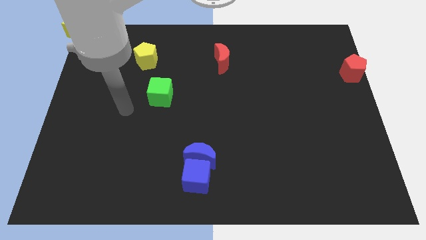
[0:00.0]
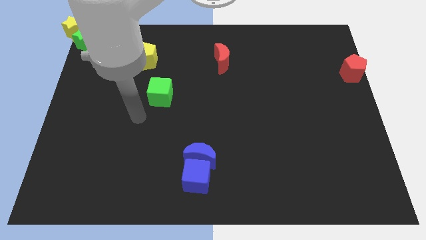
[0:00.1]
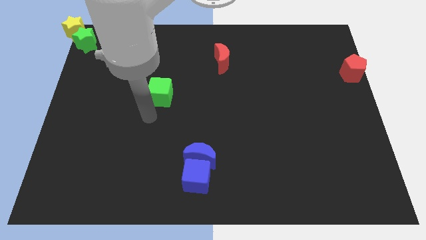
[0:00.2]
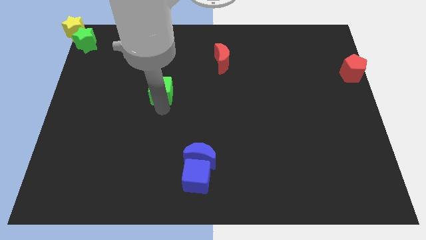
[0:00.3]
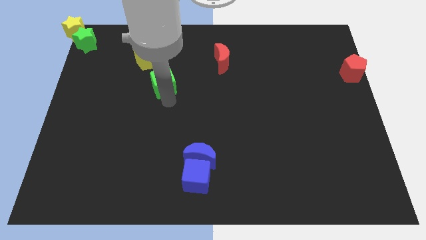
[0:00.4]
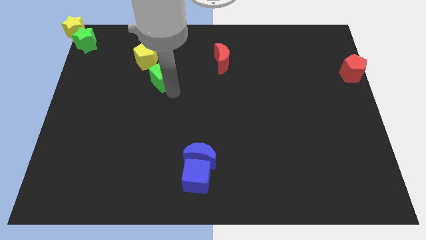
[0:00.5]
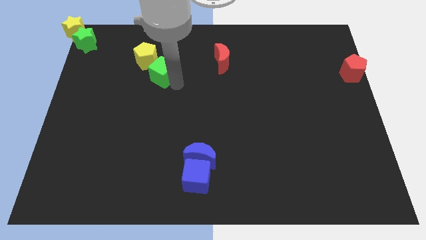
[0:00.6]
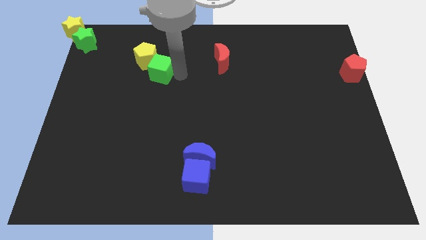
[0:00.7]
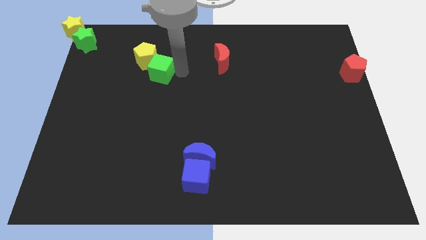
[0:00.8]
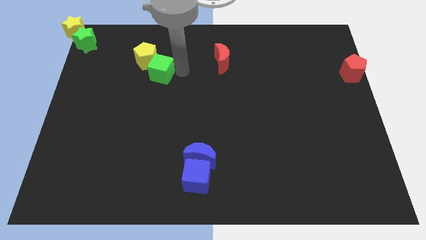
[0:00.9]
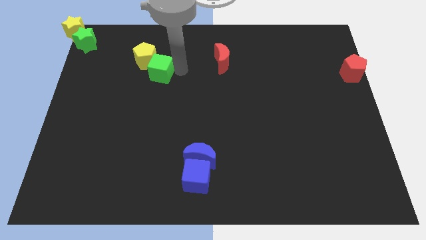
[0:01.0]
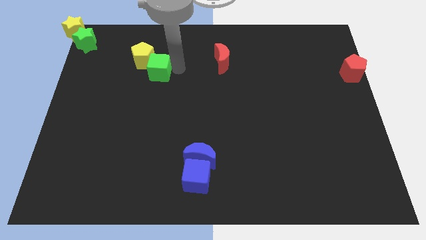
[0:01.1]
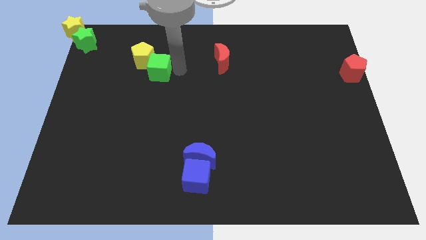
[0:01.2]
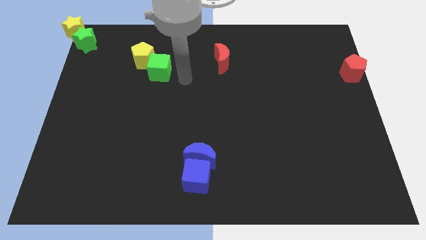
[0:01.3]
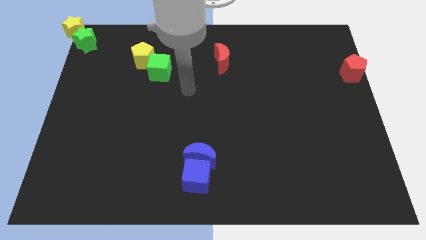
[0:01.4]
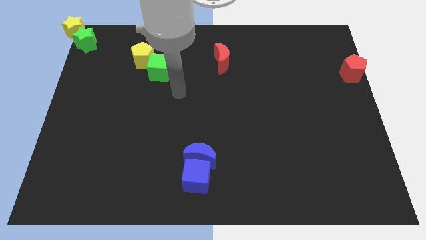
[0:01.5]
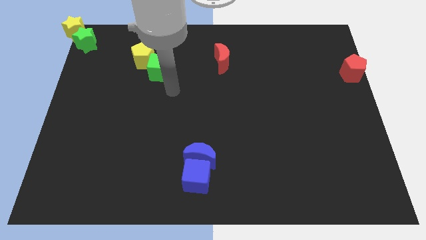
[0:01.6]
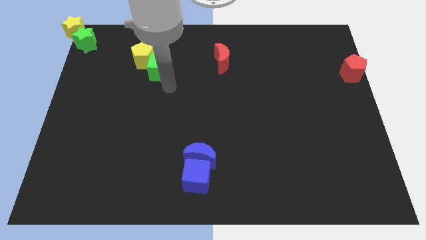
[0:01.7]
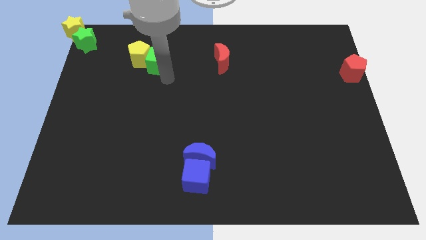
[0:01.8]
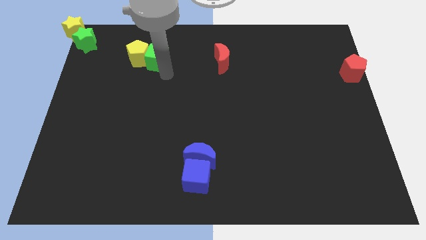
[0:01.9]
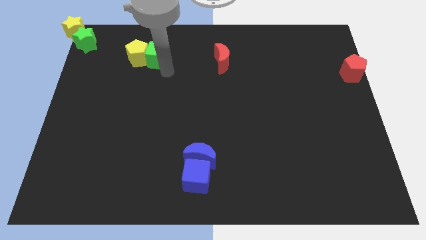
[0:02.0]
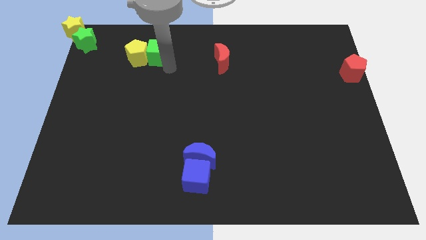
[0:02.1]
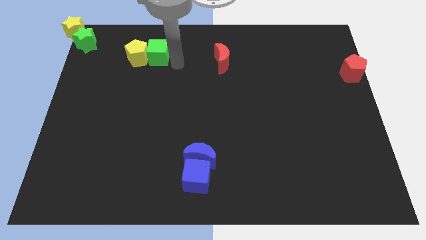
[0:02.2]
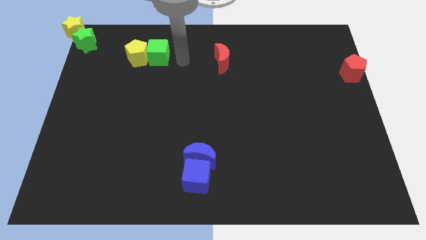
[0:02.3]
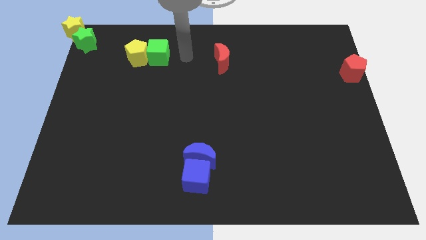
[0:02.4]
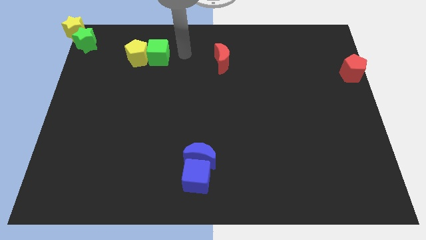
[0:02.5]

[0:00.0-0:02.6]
place the green cube close to the yellow pentagon

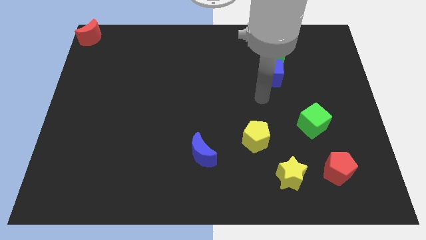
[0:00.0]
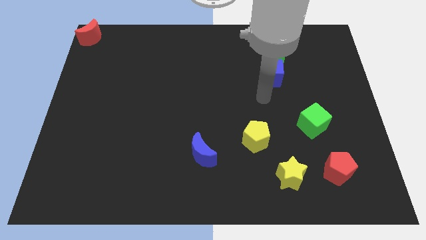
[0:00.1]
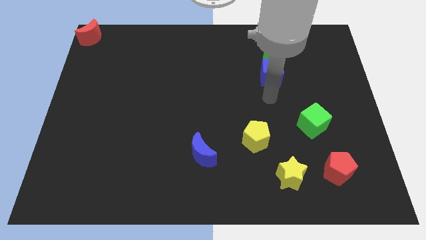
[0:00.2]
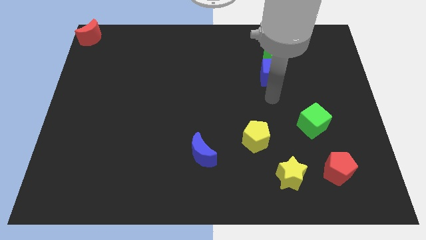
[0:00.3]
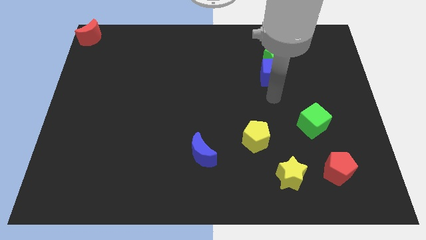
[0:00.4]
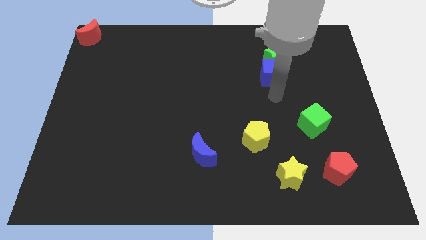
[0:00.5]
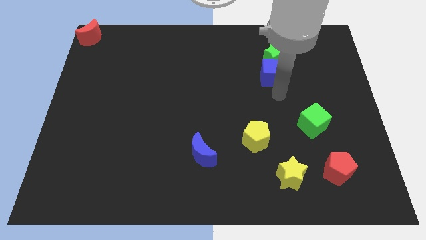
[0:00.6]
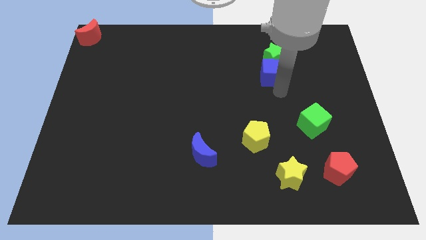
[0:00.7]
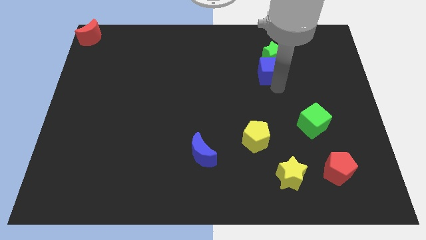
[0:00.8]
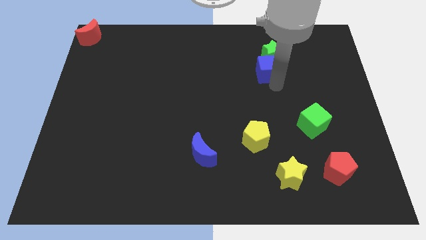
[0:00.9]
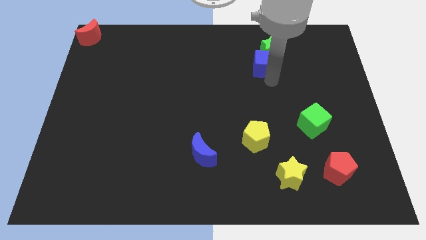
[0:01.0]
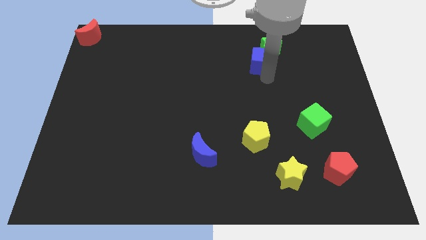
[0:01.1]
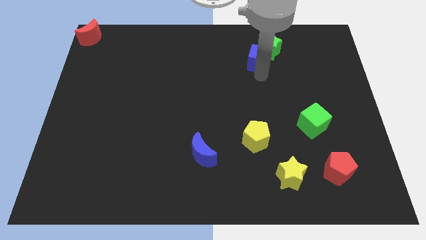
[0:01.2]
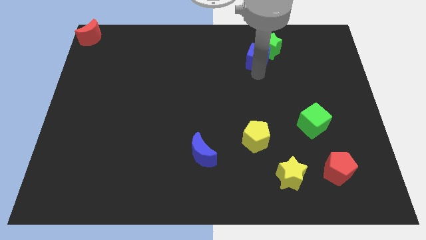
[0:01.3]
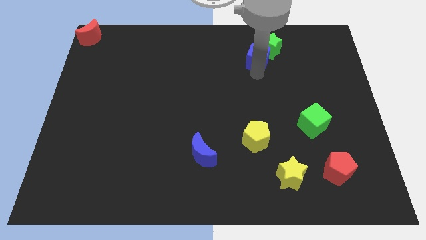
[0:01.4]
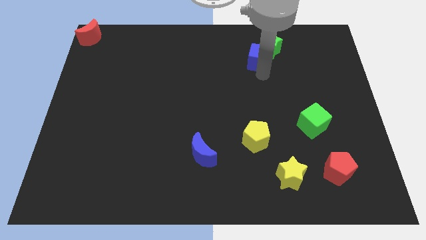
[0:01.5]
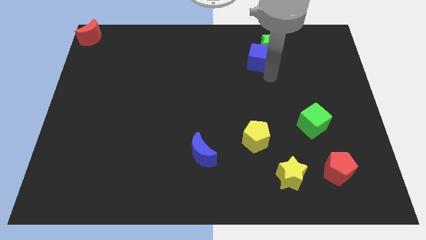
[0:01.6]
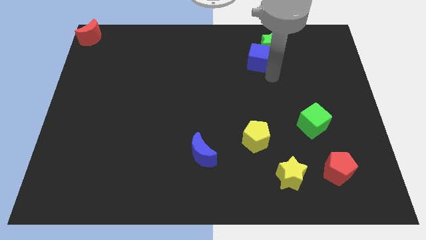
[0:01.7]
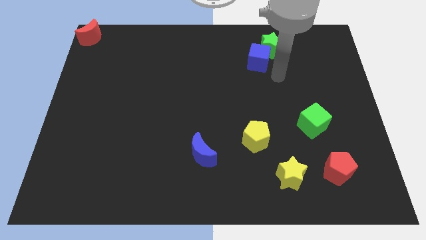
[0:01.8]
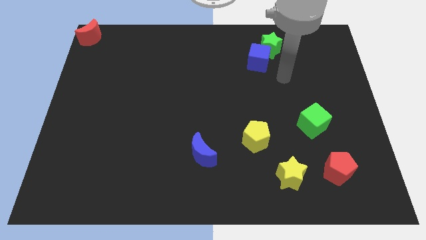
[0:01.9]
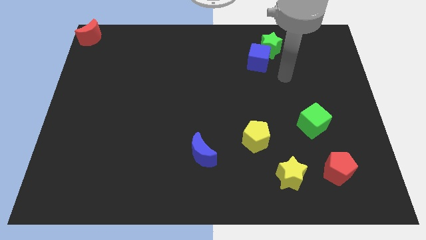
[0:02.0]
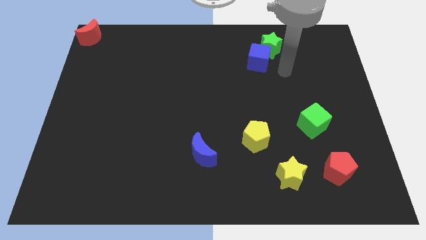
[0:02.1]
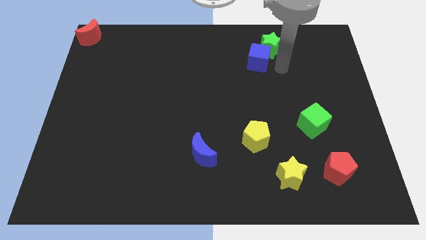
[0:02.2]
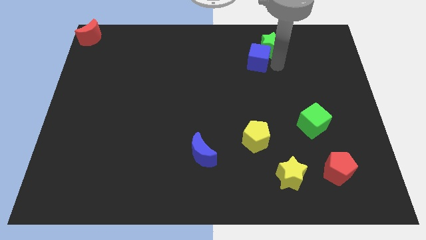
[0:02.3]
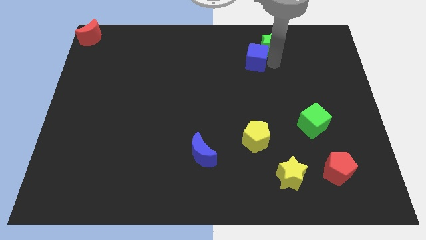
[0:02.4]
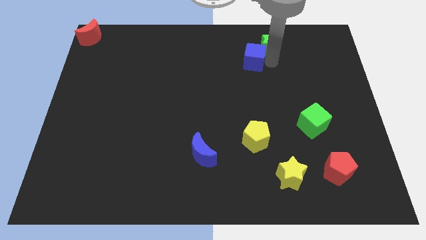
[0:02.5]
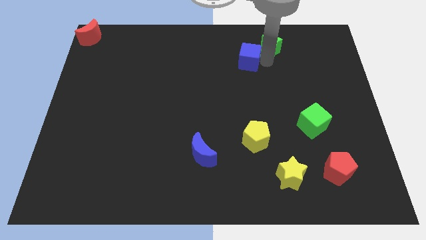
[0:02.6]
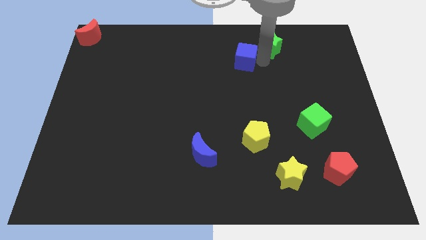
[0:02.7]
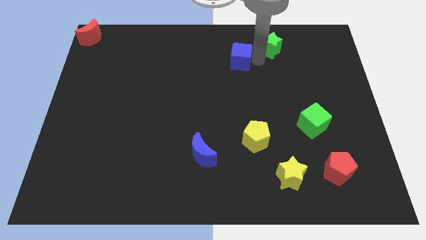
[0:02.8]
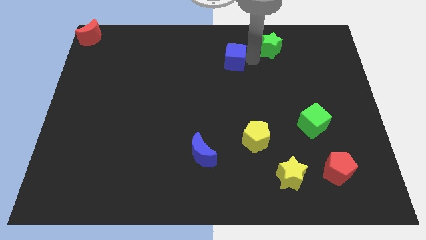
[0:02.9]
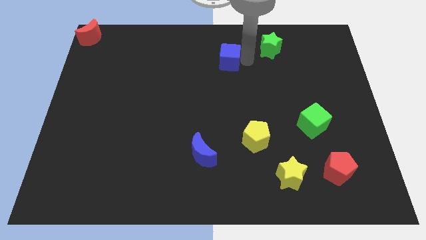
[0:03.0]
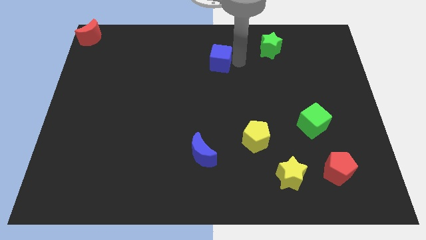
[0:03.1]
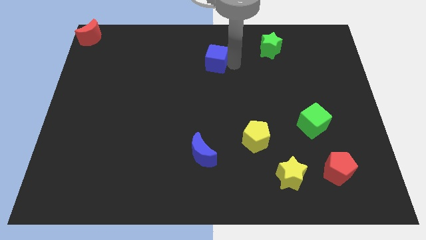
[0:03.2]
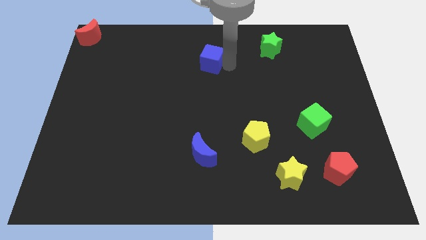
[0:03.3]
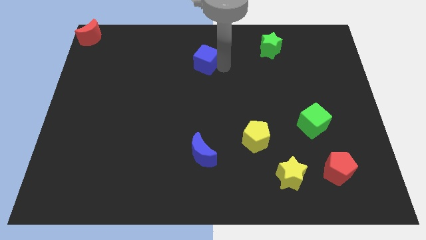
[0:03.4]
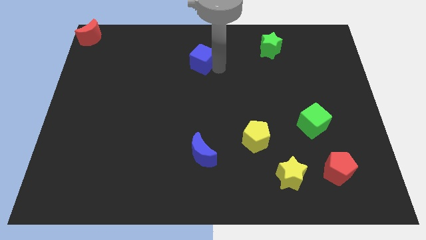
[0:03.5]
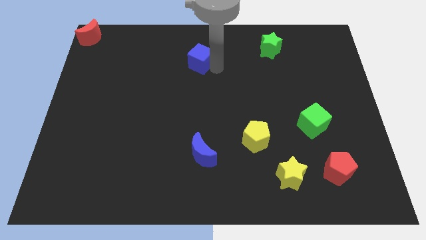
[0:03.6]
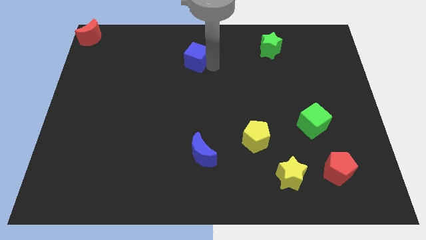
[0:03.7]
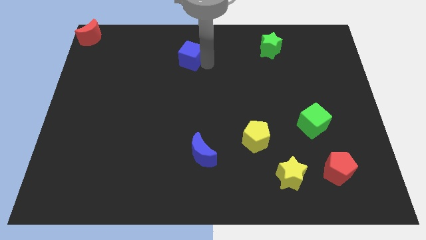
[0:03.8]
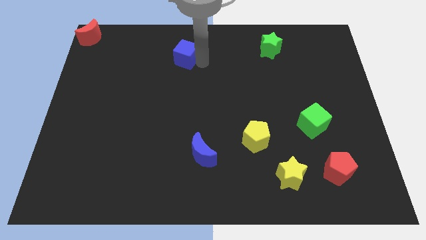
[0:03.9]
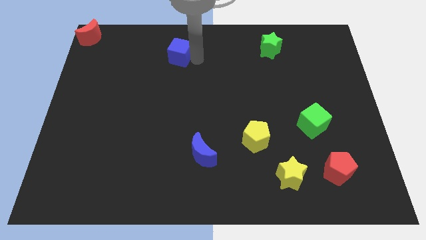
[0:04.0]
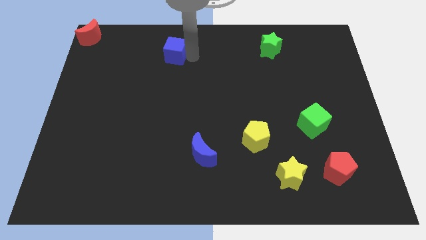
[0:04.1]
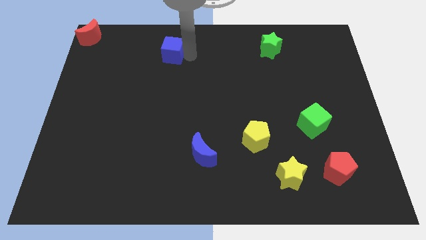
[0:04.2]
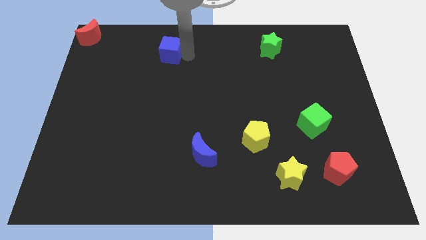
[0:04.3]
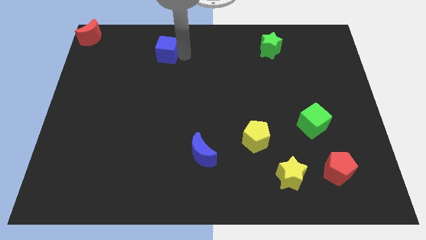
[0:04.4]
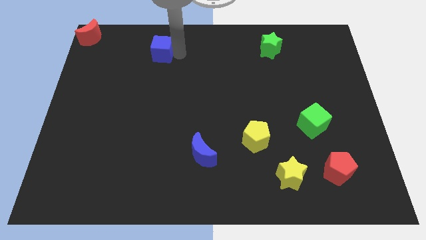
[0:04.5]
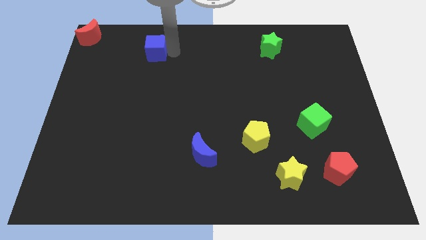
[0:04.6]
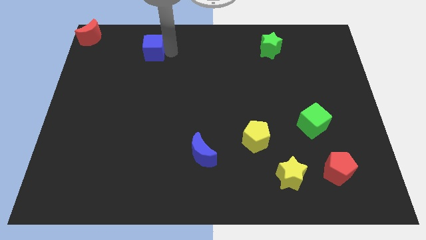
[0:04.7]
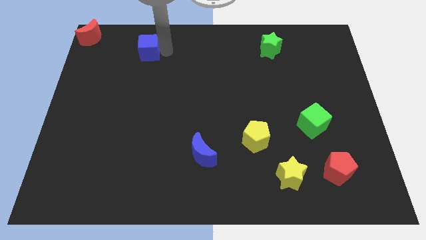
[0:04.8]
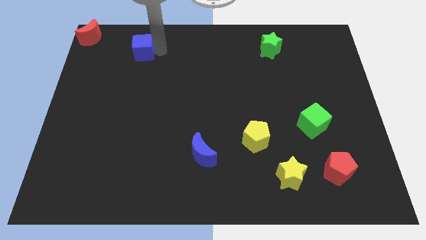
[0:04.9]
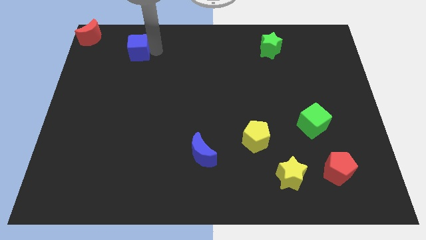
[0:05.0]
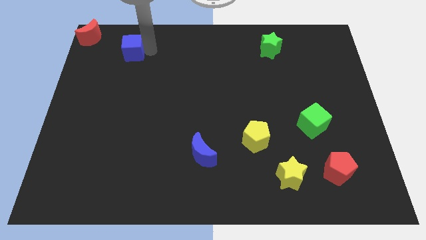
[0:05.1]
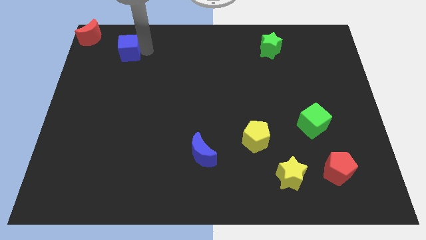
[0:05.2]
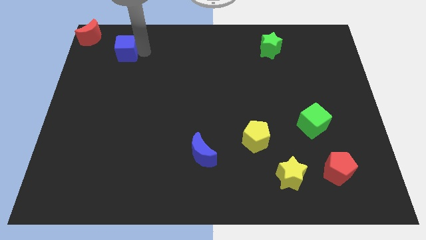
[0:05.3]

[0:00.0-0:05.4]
separate the blue cube from the green star

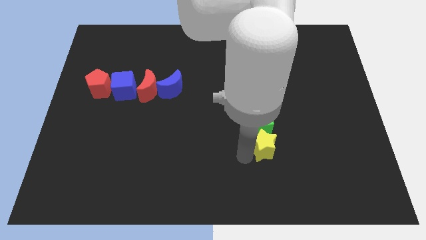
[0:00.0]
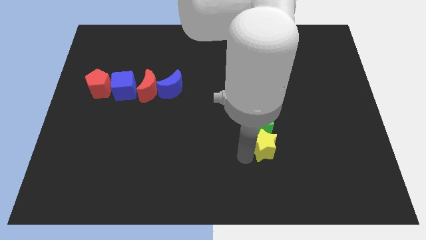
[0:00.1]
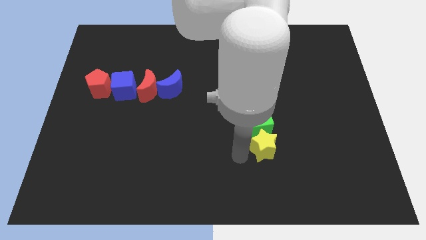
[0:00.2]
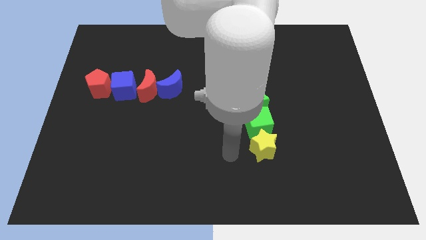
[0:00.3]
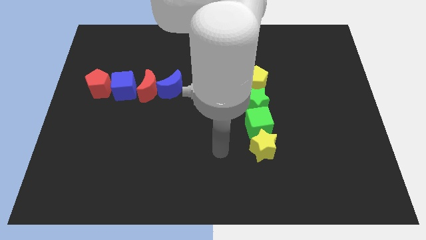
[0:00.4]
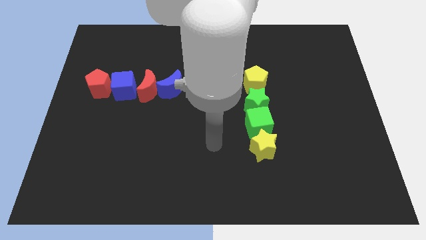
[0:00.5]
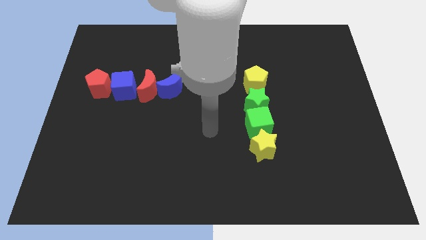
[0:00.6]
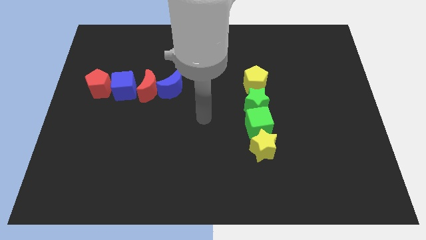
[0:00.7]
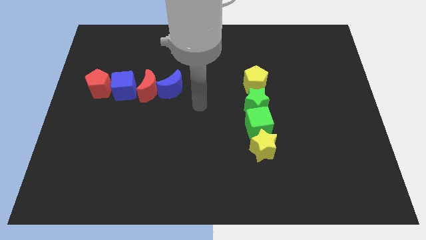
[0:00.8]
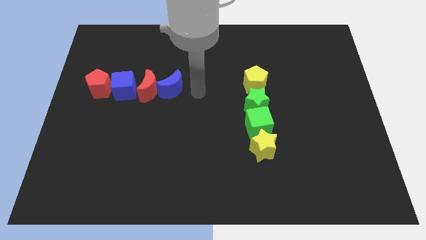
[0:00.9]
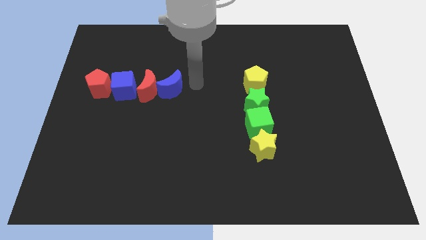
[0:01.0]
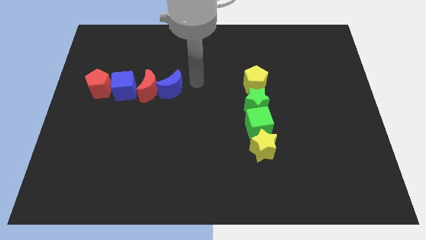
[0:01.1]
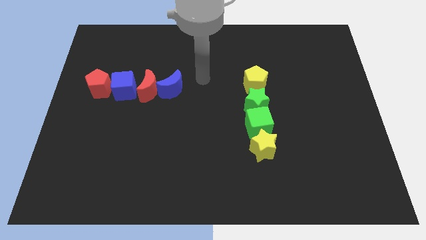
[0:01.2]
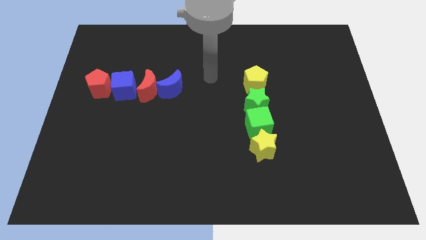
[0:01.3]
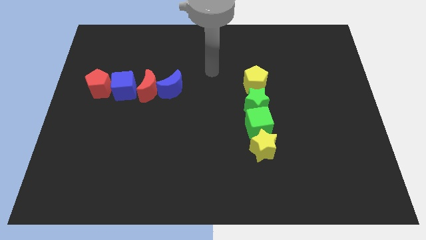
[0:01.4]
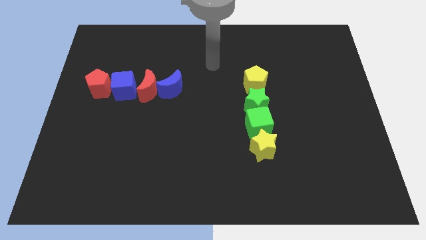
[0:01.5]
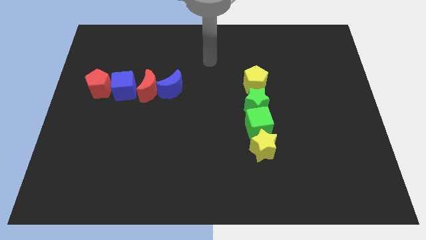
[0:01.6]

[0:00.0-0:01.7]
move your arm away from the yellow star
